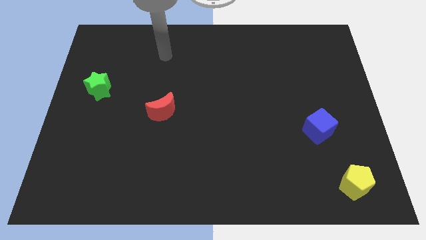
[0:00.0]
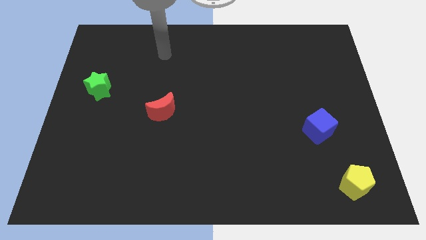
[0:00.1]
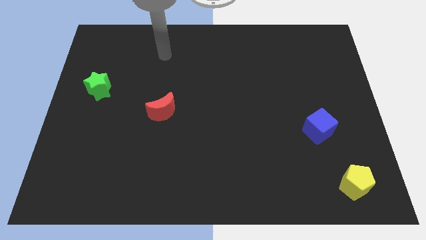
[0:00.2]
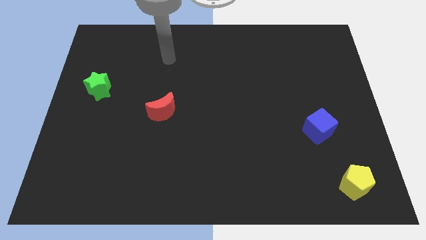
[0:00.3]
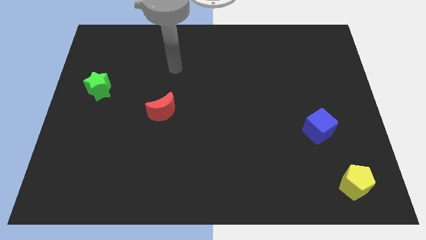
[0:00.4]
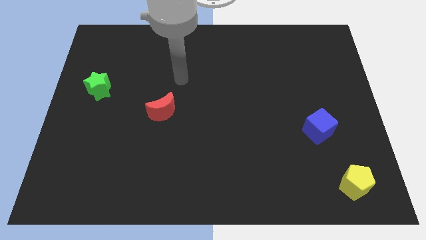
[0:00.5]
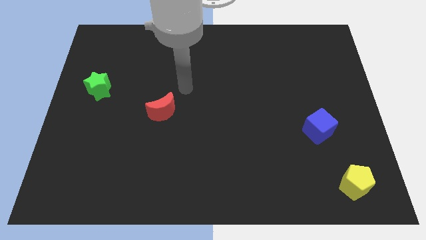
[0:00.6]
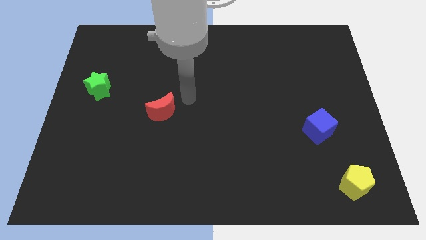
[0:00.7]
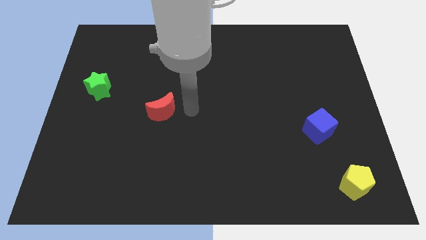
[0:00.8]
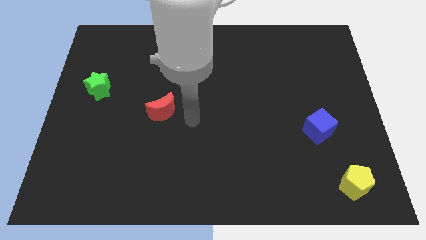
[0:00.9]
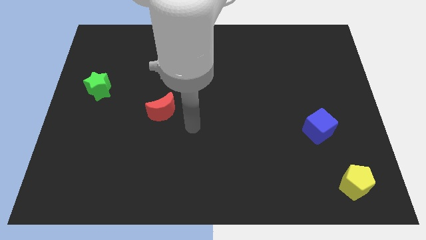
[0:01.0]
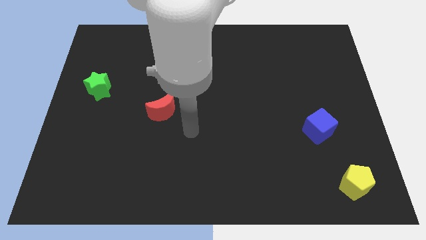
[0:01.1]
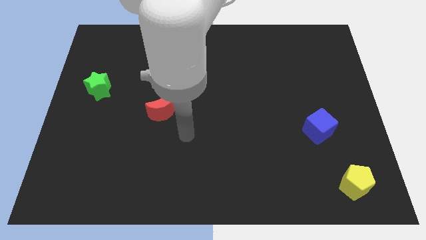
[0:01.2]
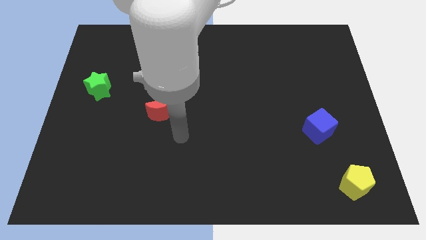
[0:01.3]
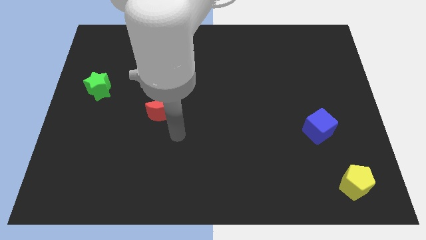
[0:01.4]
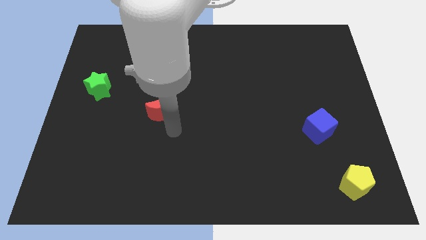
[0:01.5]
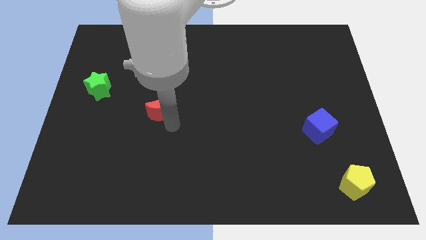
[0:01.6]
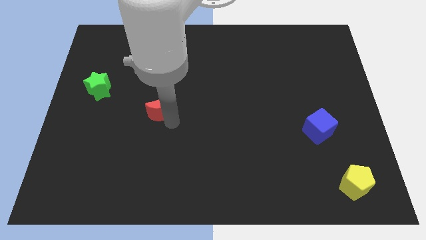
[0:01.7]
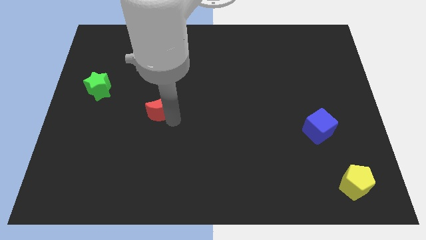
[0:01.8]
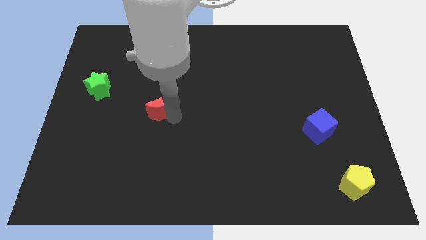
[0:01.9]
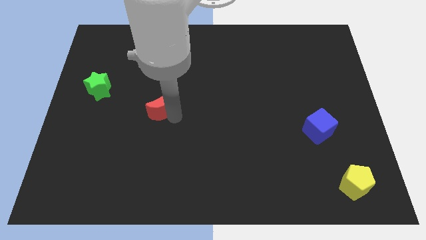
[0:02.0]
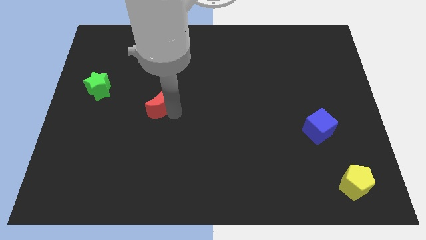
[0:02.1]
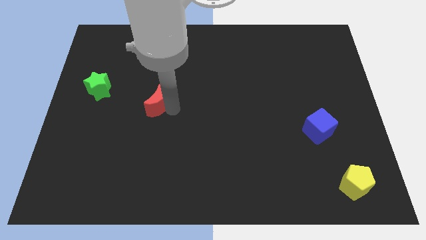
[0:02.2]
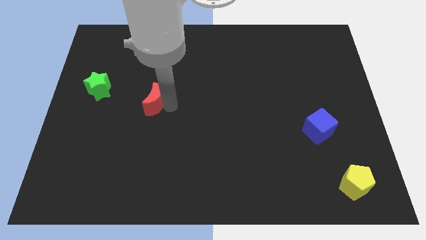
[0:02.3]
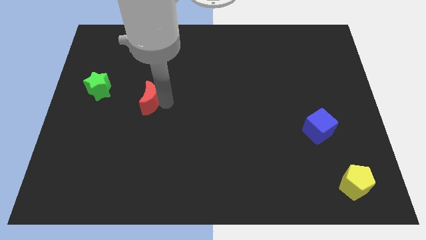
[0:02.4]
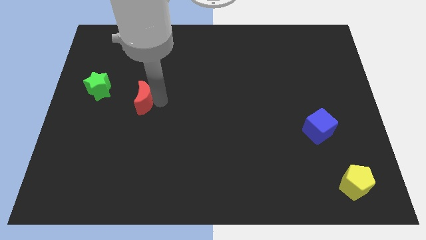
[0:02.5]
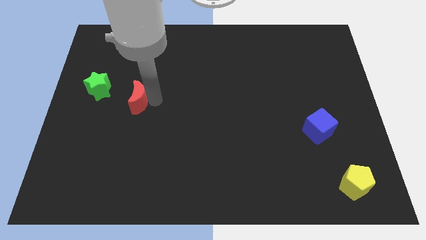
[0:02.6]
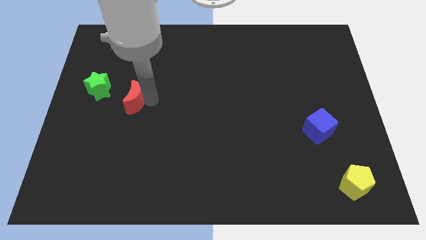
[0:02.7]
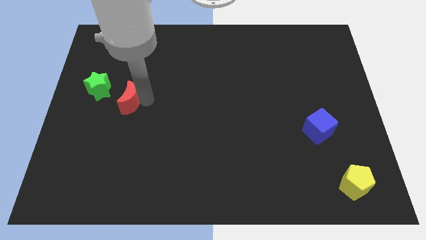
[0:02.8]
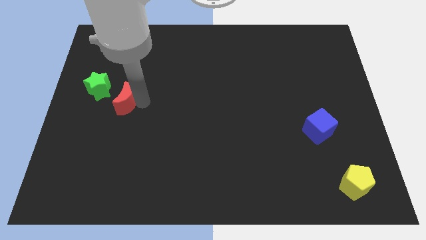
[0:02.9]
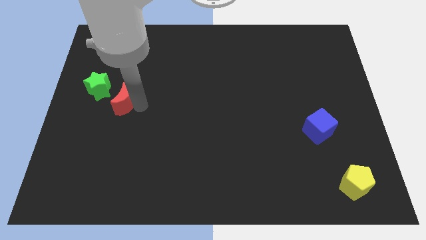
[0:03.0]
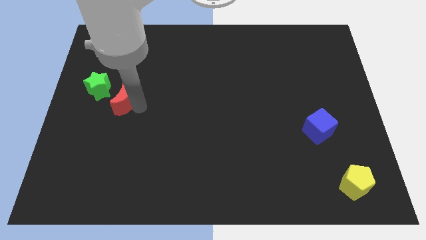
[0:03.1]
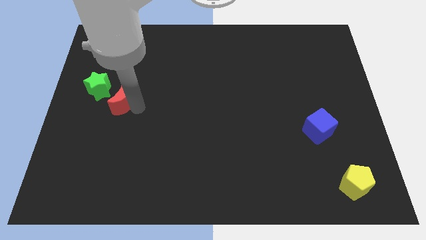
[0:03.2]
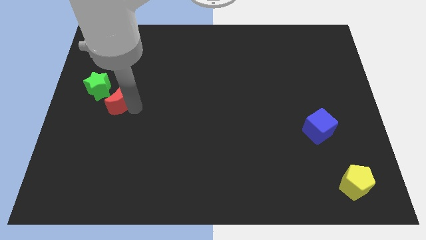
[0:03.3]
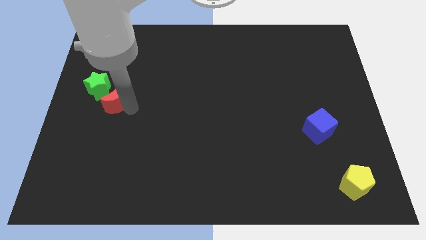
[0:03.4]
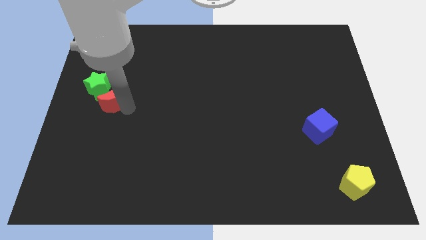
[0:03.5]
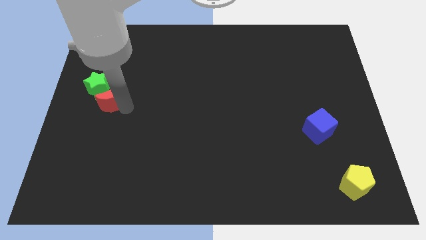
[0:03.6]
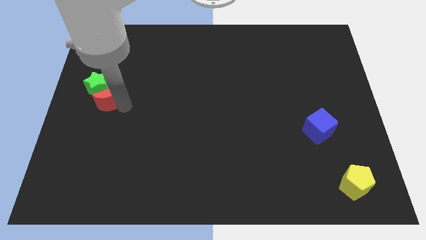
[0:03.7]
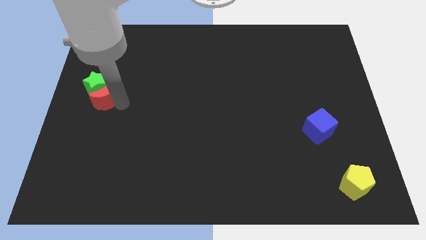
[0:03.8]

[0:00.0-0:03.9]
put the red block to the star

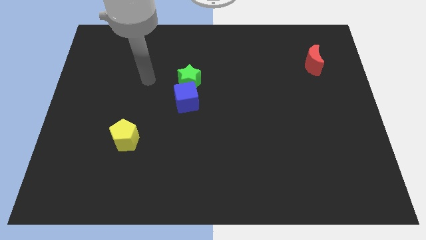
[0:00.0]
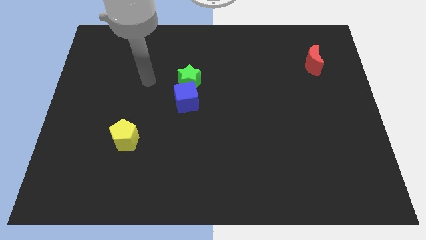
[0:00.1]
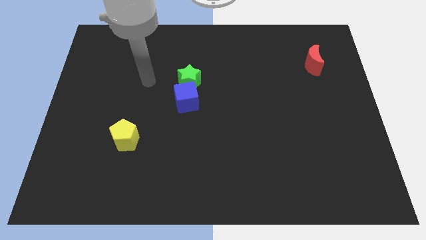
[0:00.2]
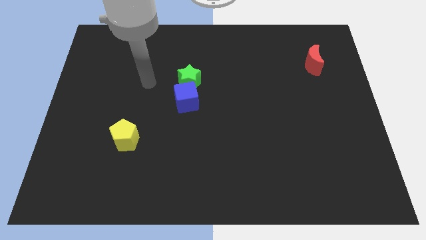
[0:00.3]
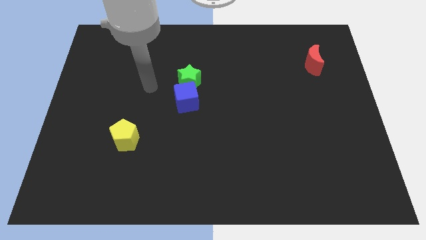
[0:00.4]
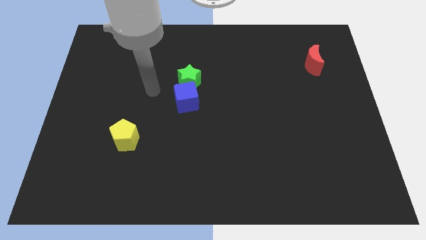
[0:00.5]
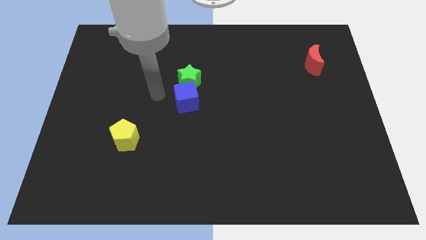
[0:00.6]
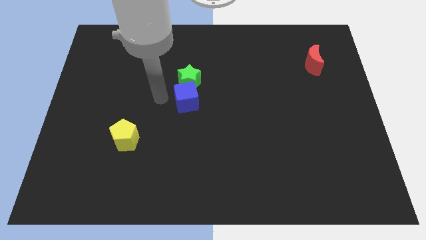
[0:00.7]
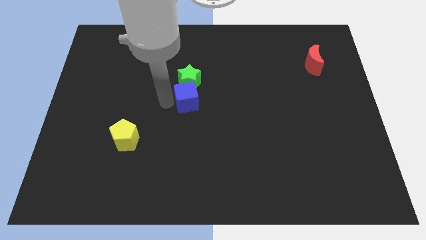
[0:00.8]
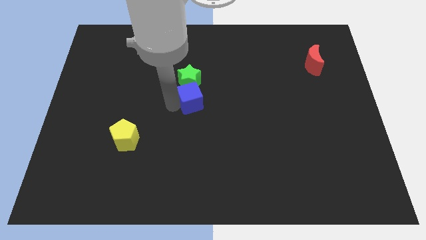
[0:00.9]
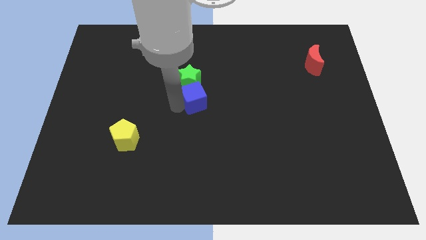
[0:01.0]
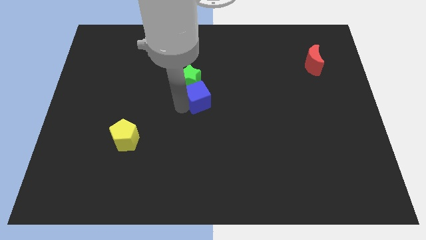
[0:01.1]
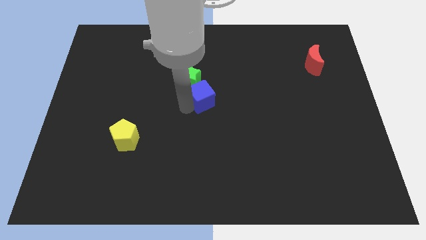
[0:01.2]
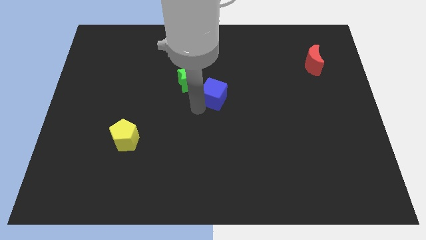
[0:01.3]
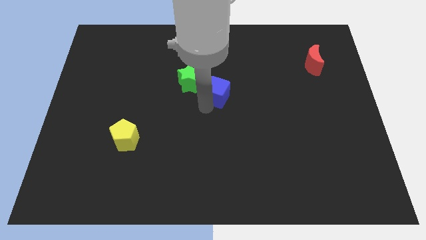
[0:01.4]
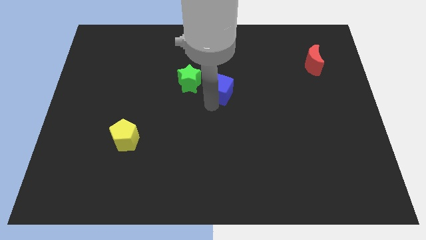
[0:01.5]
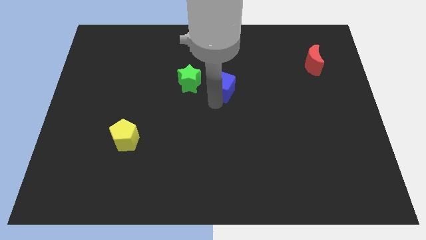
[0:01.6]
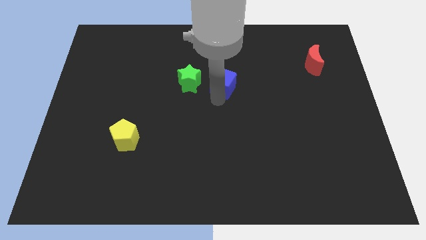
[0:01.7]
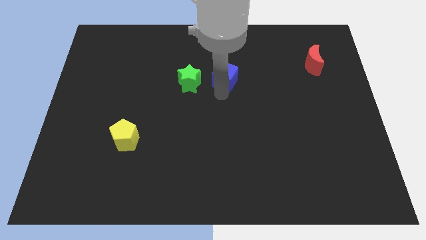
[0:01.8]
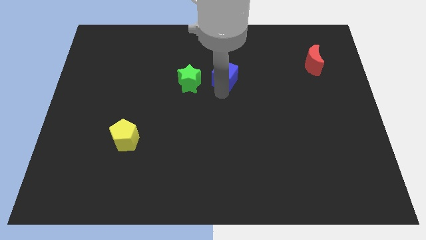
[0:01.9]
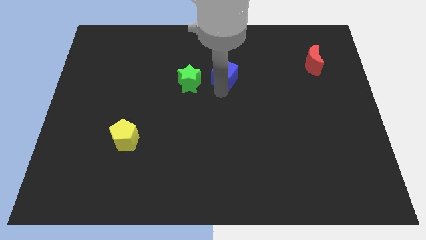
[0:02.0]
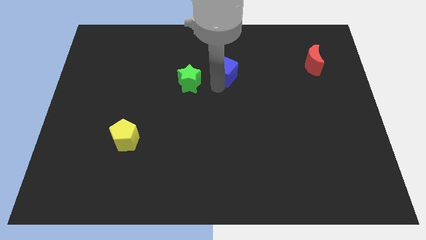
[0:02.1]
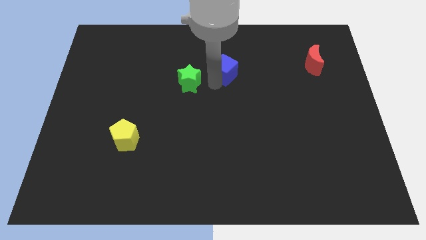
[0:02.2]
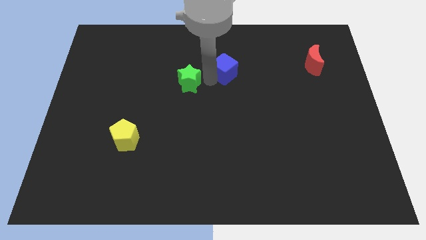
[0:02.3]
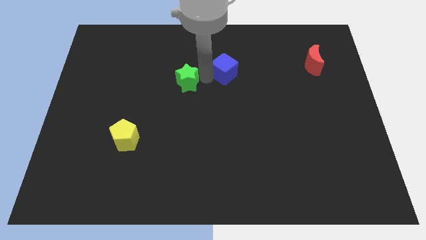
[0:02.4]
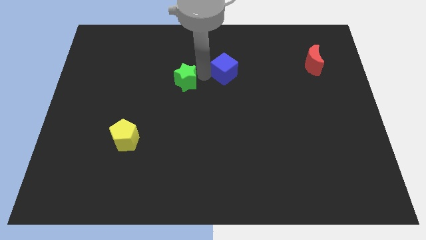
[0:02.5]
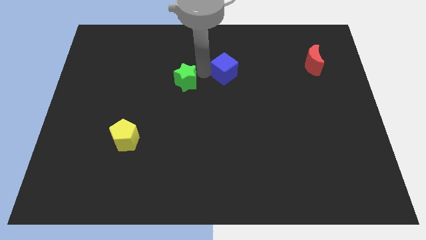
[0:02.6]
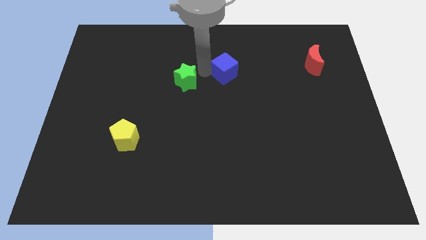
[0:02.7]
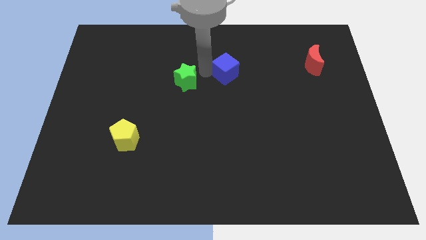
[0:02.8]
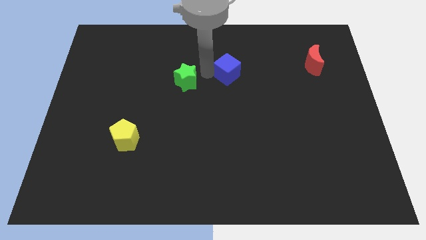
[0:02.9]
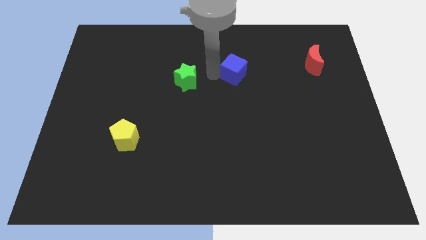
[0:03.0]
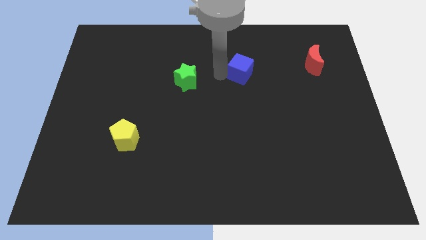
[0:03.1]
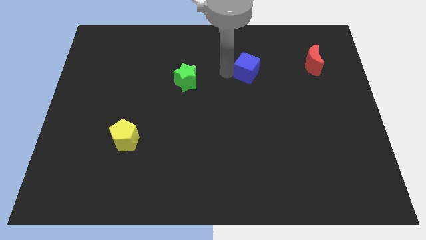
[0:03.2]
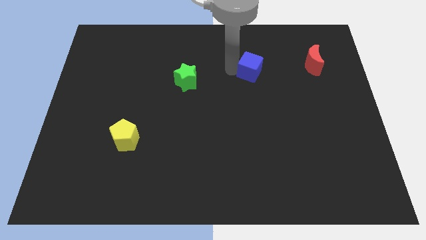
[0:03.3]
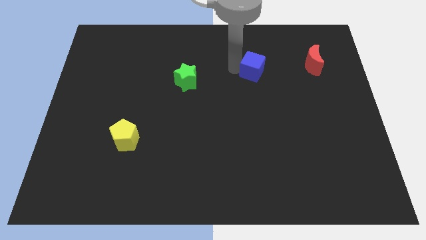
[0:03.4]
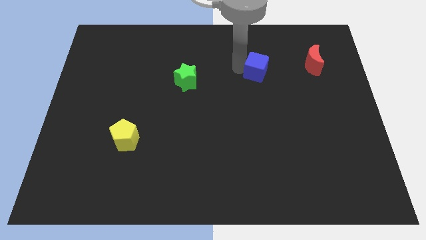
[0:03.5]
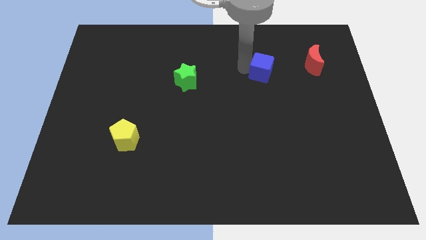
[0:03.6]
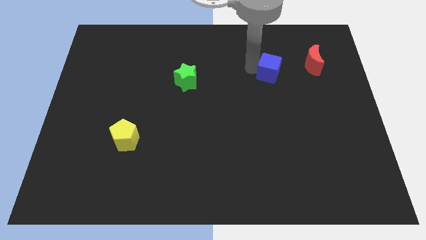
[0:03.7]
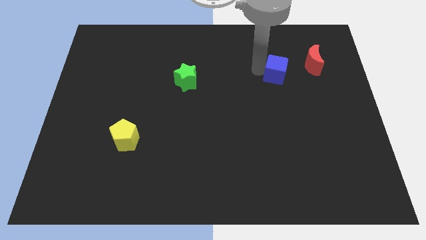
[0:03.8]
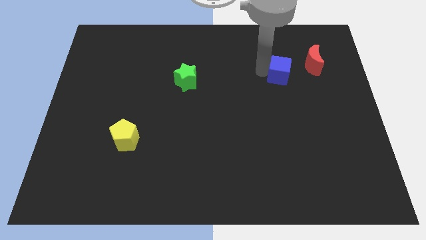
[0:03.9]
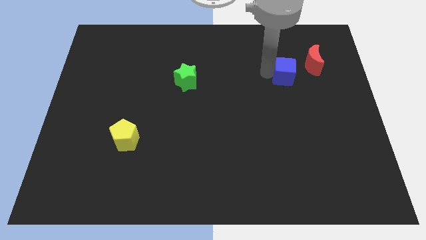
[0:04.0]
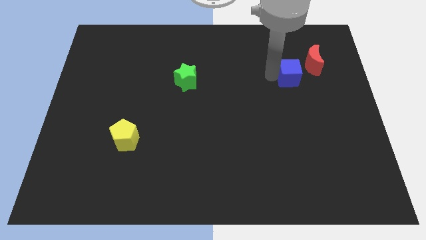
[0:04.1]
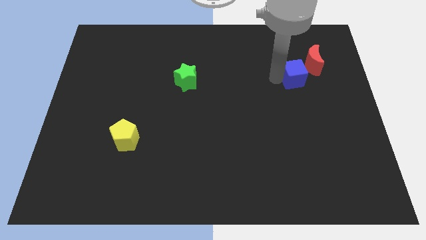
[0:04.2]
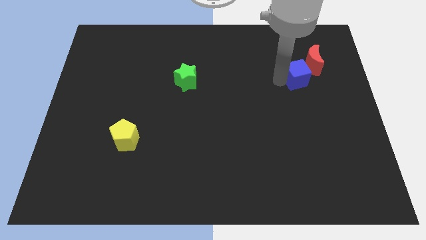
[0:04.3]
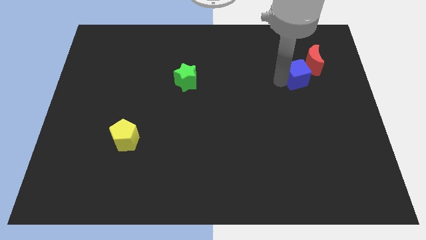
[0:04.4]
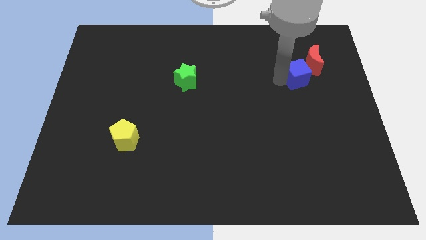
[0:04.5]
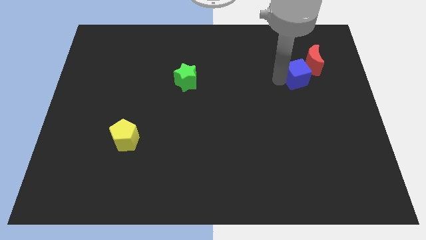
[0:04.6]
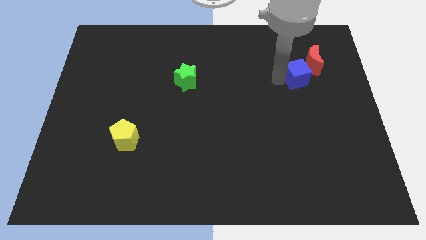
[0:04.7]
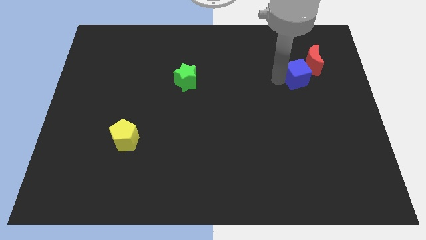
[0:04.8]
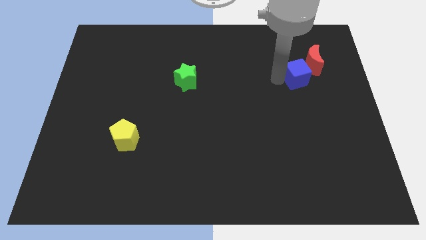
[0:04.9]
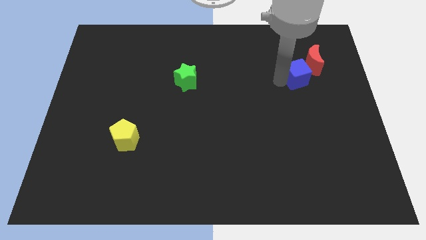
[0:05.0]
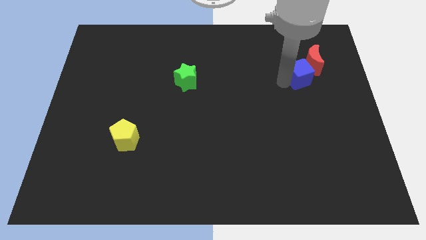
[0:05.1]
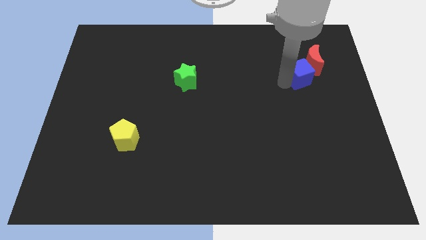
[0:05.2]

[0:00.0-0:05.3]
slide the blue block next to the red moon
